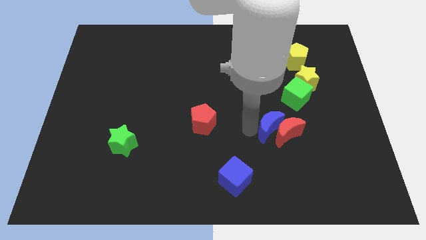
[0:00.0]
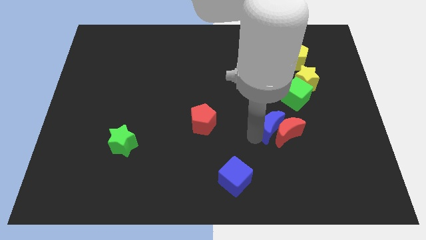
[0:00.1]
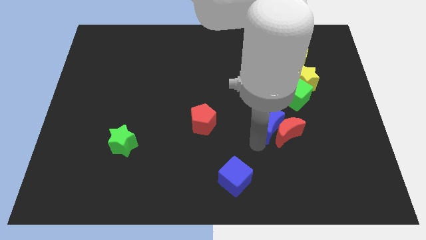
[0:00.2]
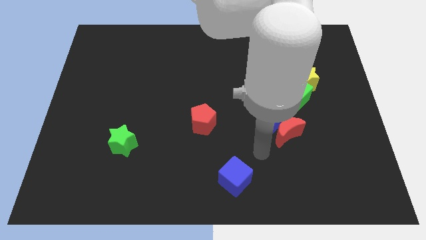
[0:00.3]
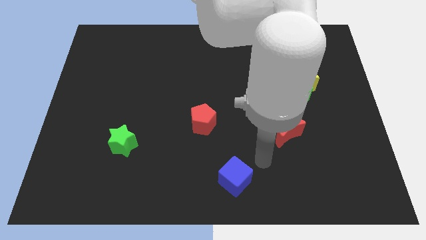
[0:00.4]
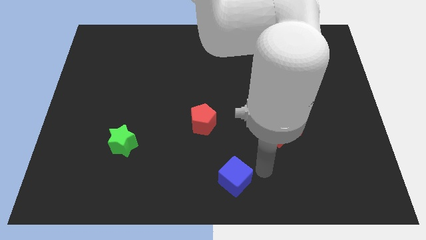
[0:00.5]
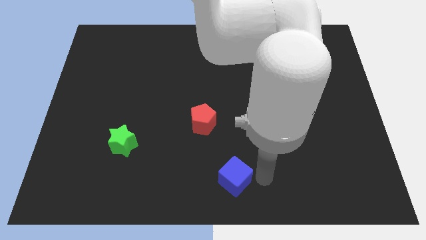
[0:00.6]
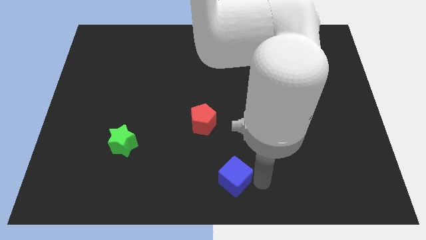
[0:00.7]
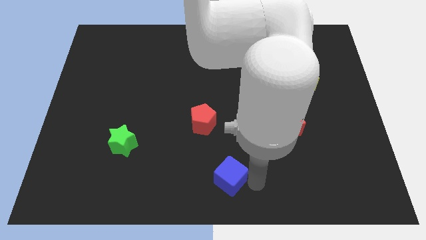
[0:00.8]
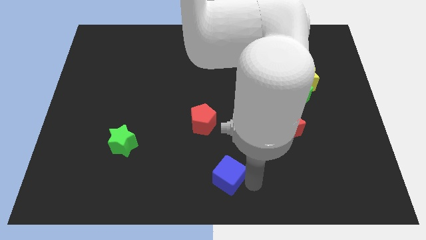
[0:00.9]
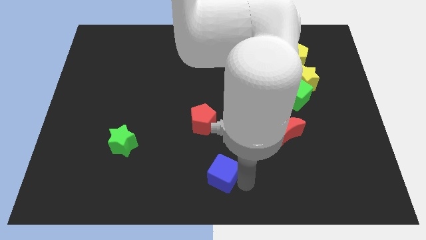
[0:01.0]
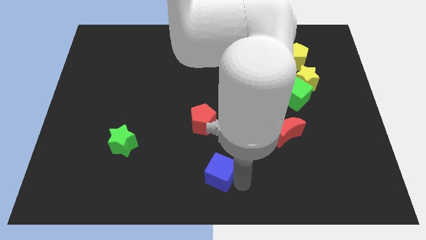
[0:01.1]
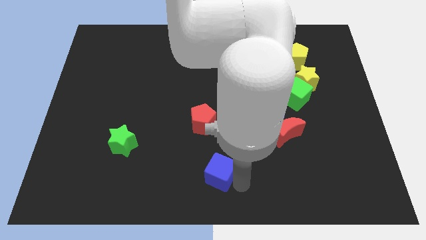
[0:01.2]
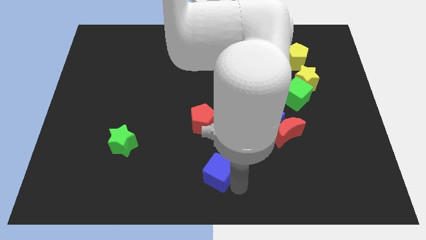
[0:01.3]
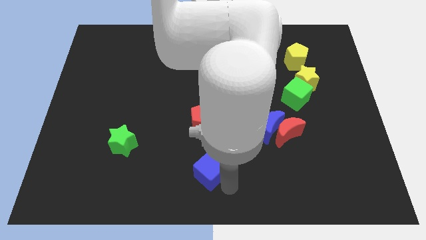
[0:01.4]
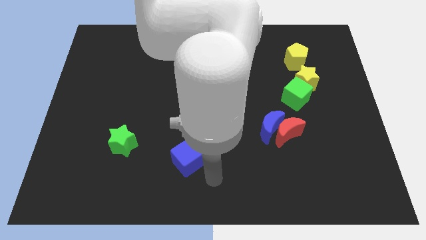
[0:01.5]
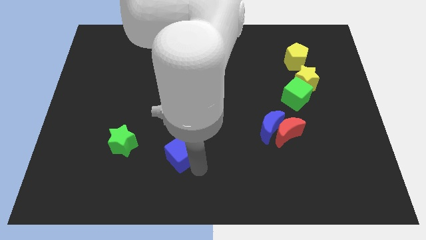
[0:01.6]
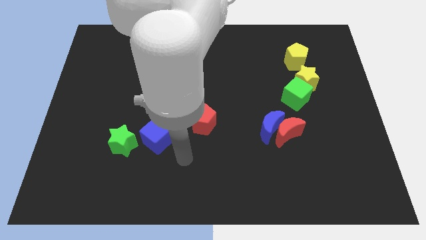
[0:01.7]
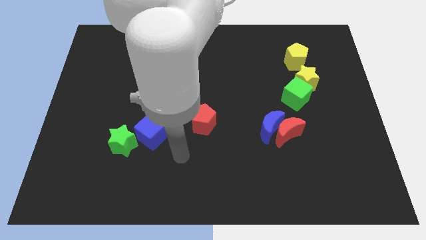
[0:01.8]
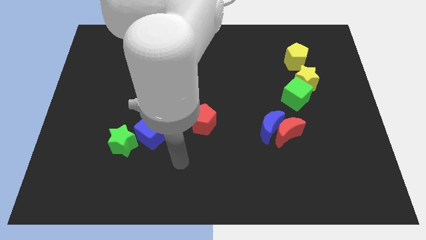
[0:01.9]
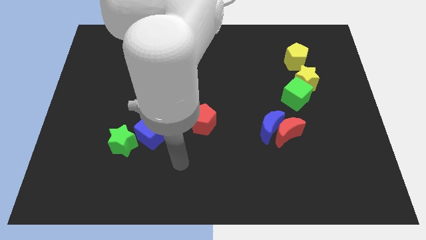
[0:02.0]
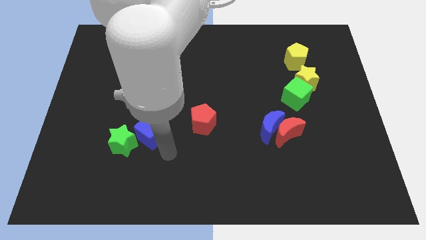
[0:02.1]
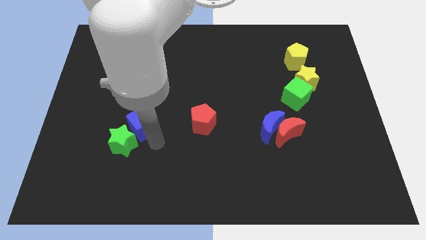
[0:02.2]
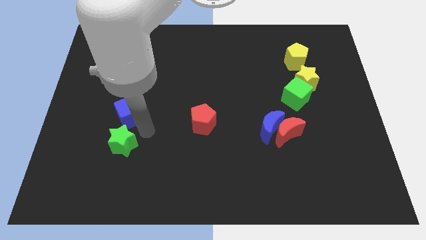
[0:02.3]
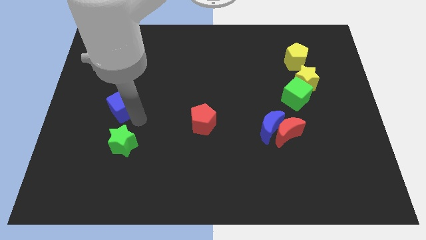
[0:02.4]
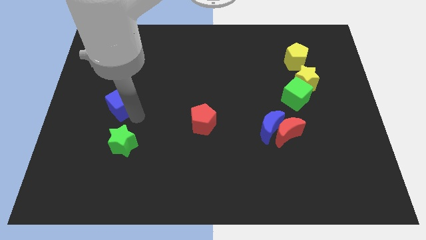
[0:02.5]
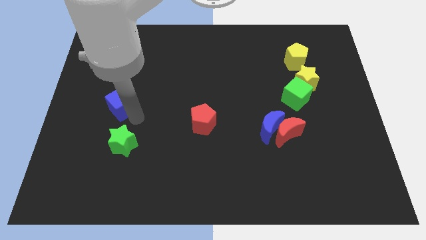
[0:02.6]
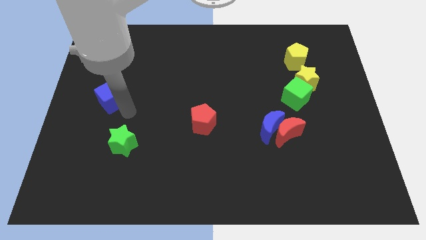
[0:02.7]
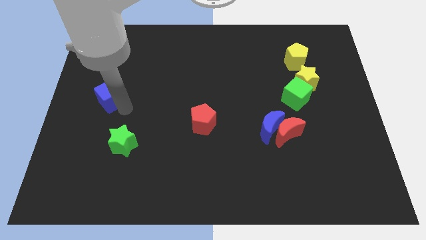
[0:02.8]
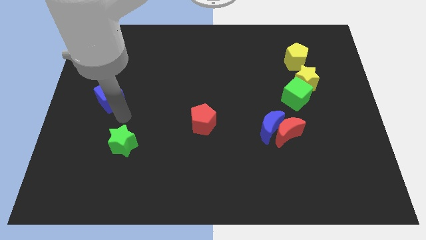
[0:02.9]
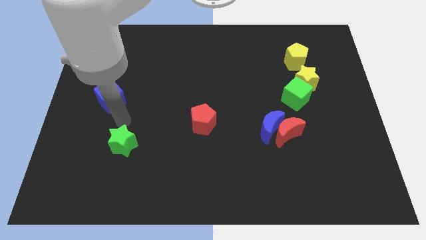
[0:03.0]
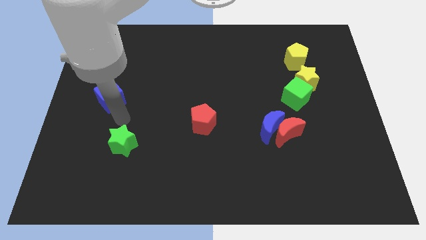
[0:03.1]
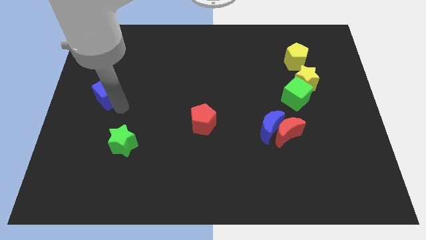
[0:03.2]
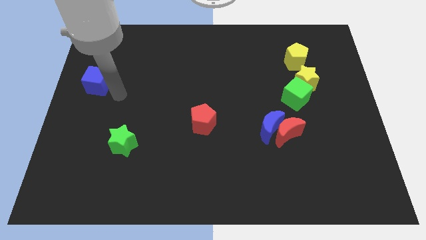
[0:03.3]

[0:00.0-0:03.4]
push the blue cube to the center left of the board

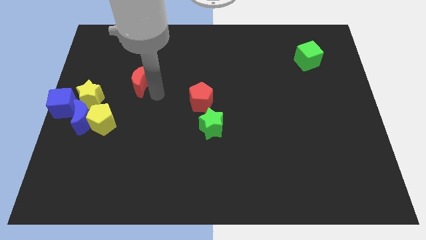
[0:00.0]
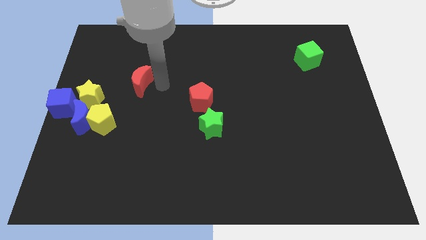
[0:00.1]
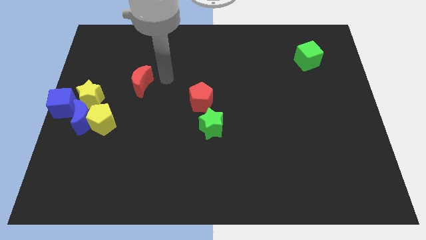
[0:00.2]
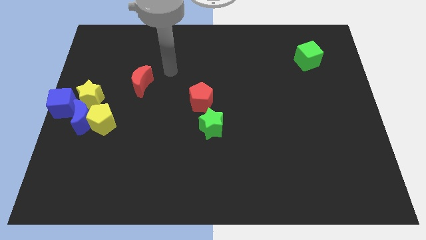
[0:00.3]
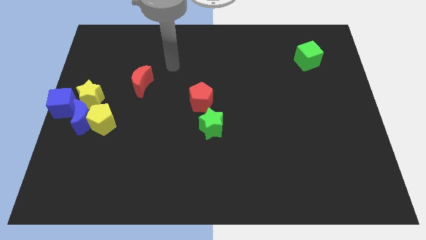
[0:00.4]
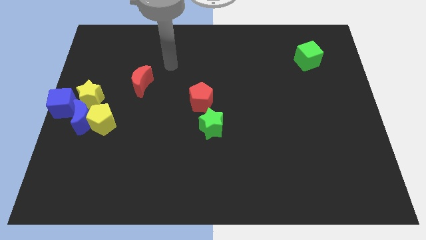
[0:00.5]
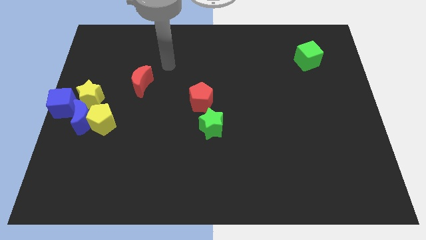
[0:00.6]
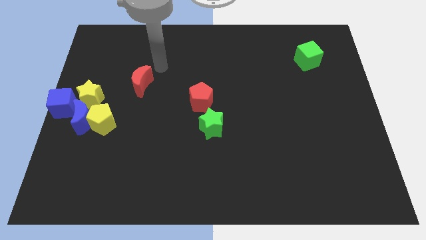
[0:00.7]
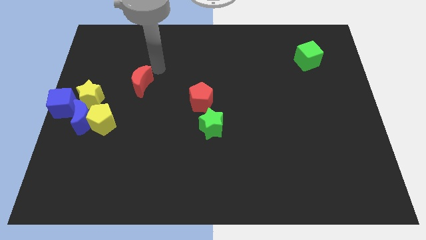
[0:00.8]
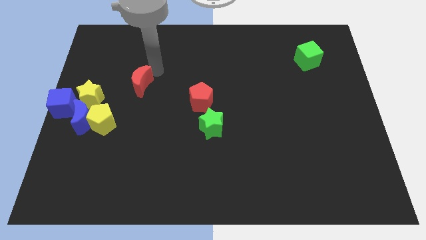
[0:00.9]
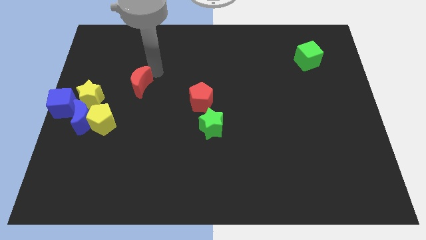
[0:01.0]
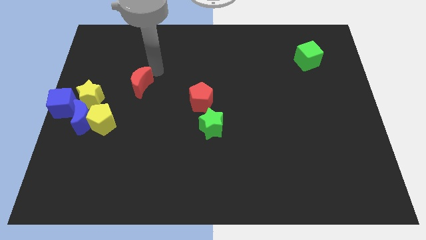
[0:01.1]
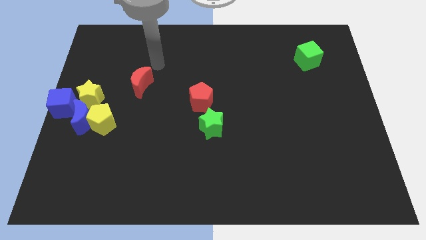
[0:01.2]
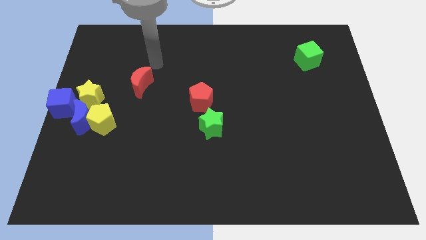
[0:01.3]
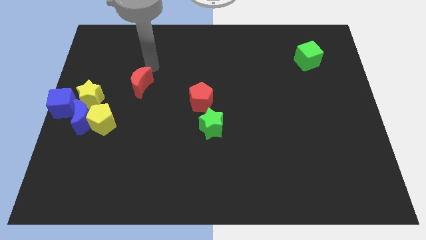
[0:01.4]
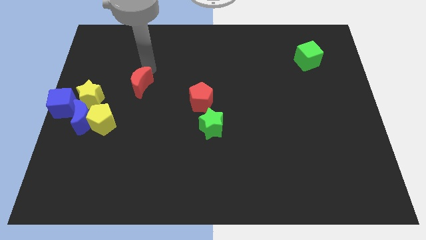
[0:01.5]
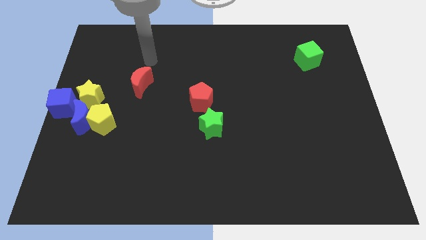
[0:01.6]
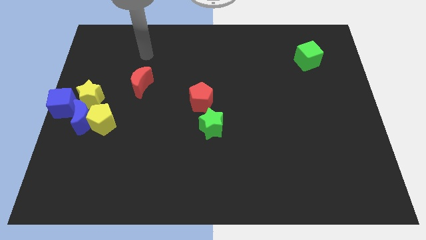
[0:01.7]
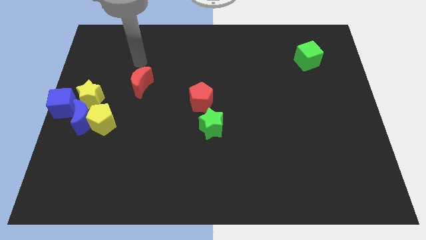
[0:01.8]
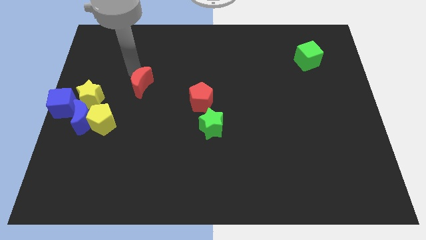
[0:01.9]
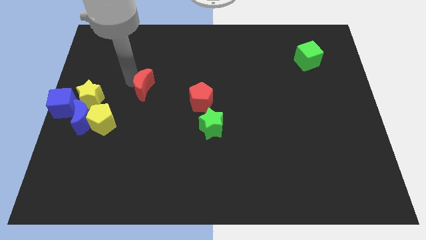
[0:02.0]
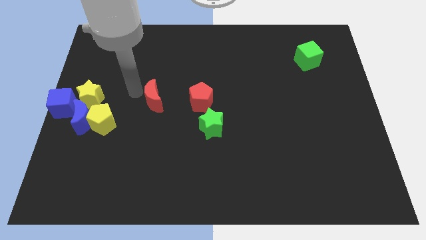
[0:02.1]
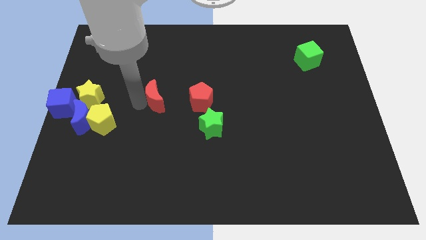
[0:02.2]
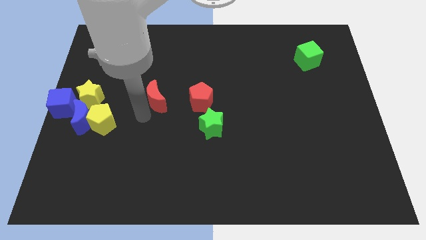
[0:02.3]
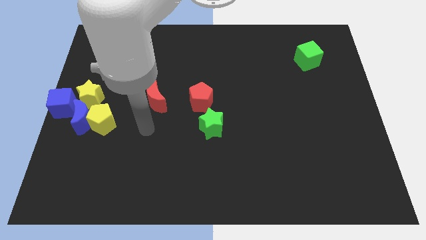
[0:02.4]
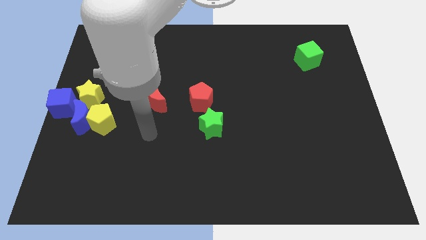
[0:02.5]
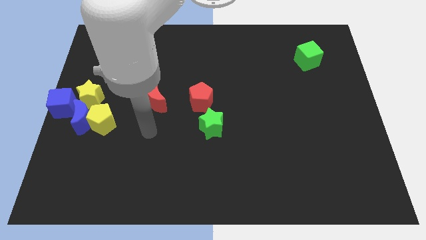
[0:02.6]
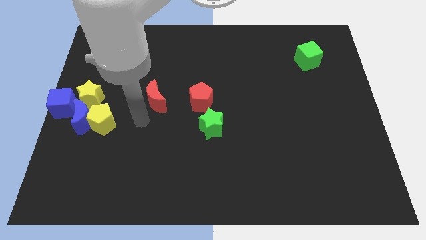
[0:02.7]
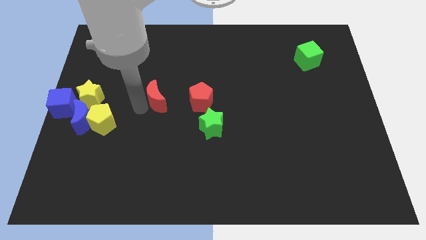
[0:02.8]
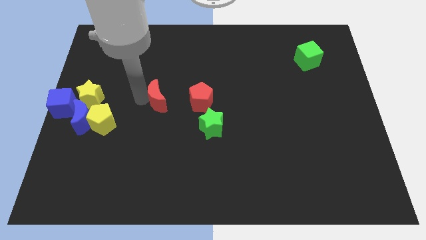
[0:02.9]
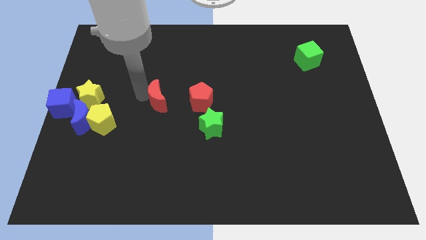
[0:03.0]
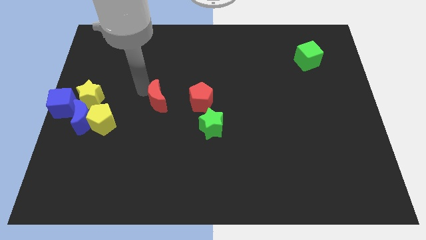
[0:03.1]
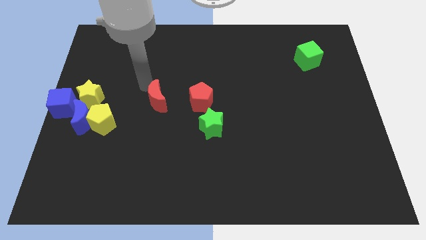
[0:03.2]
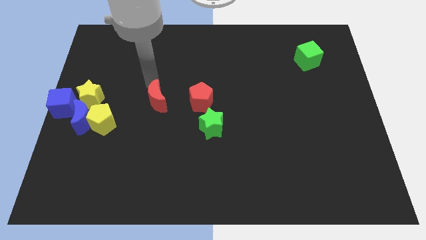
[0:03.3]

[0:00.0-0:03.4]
place the red moon to the left of the red pentagon

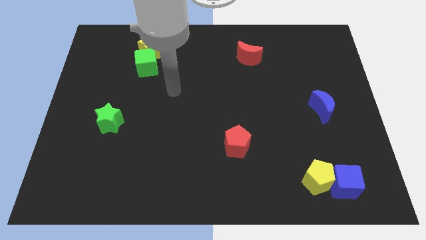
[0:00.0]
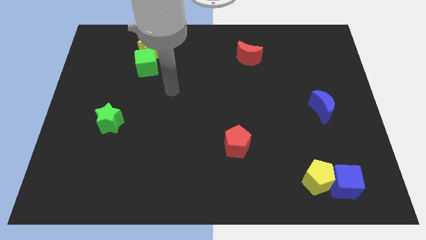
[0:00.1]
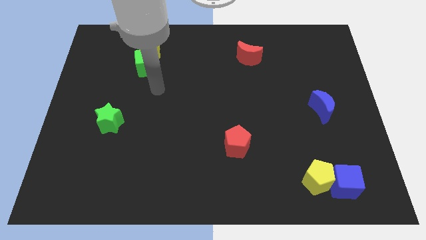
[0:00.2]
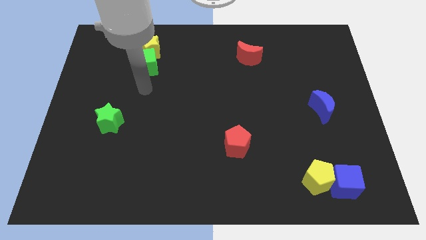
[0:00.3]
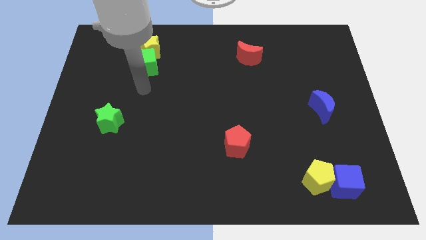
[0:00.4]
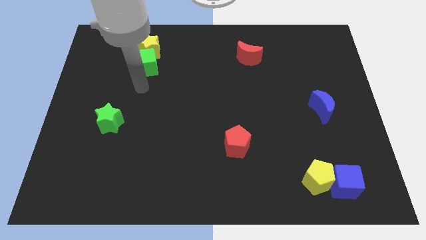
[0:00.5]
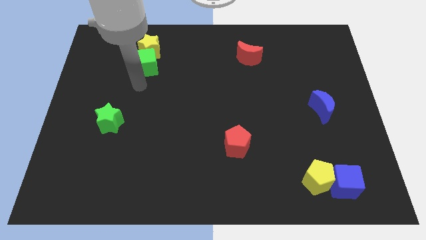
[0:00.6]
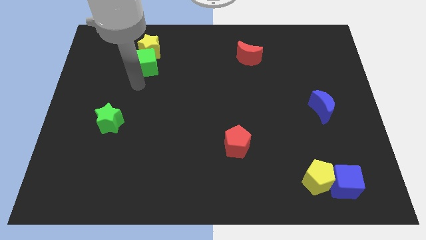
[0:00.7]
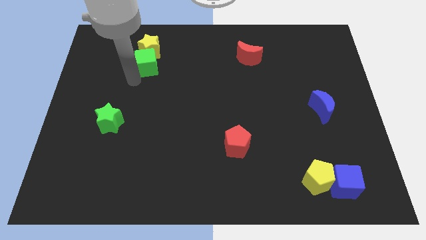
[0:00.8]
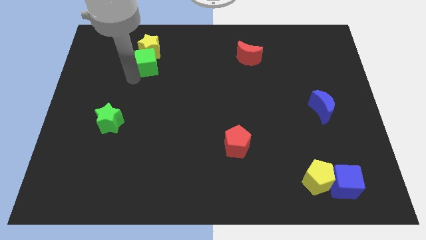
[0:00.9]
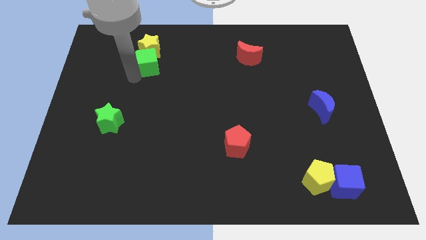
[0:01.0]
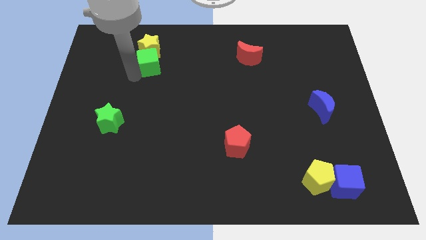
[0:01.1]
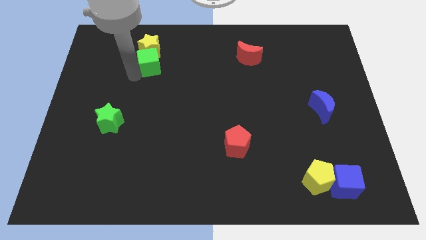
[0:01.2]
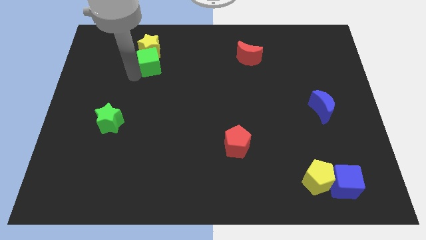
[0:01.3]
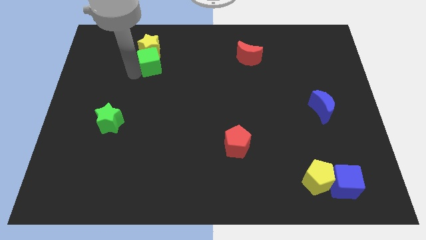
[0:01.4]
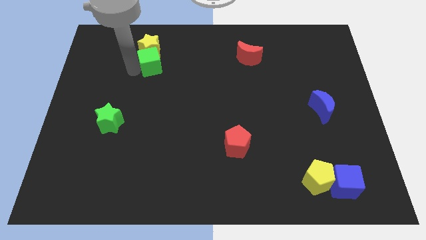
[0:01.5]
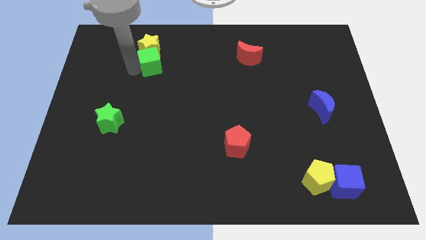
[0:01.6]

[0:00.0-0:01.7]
touch the left side of the green cube

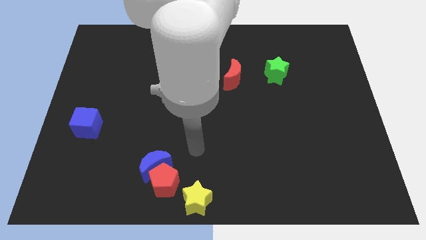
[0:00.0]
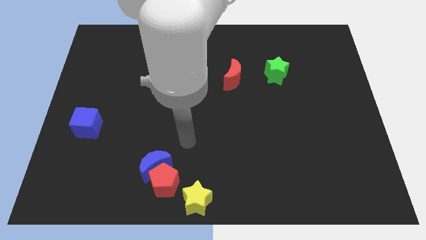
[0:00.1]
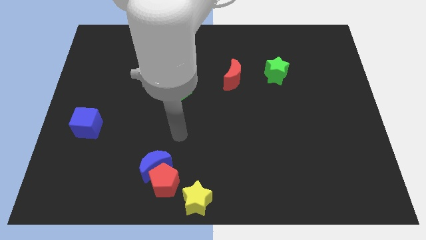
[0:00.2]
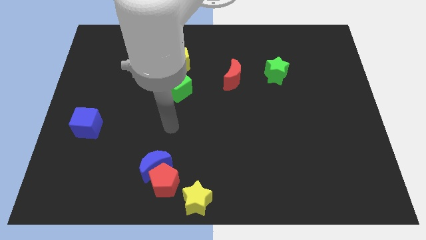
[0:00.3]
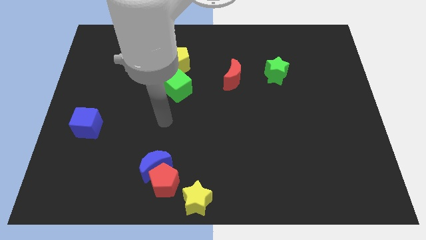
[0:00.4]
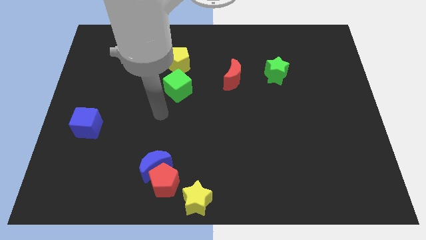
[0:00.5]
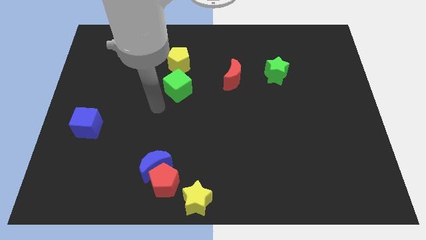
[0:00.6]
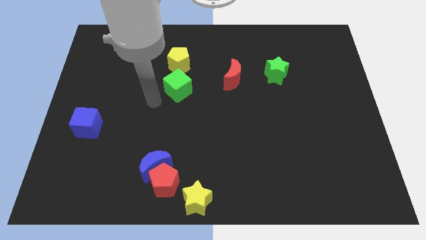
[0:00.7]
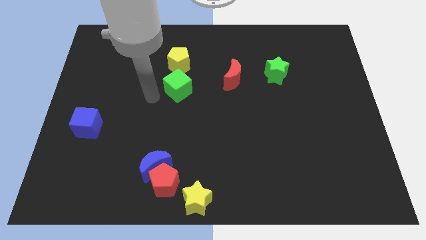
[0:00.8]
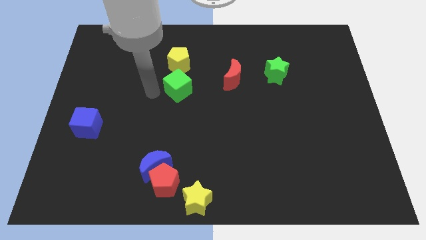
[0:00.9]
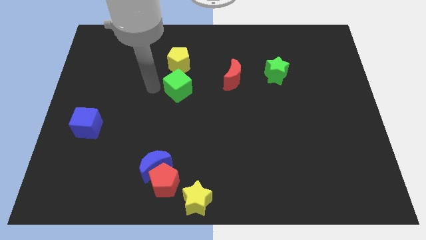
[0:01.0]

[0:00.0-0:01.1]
move your arm away from the yellow star
